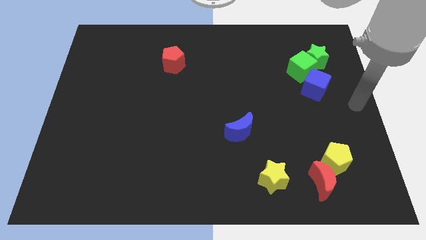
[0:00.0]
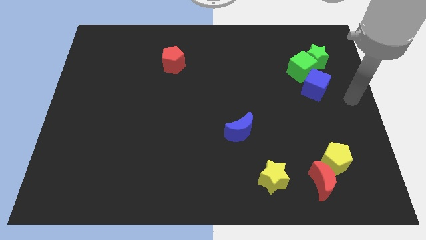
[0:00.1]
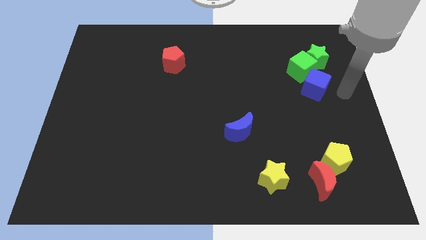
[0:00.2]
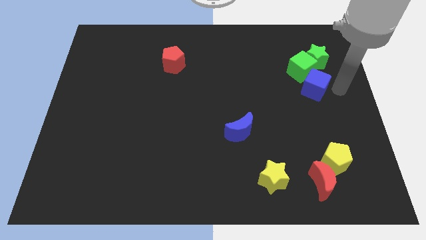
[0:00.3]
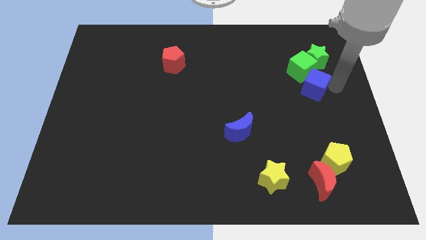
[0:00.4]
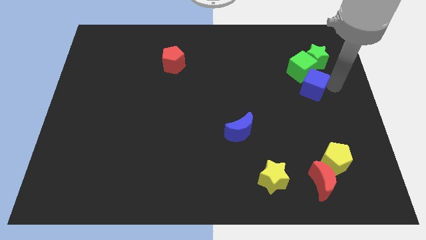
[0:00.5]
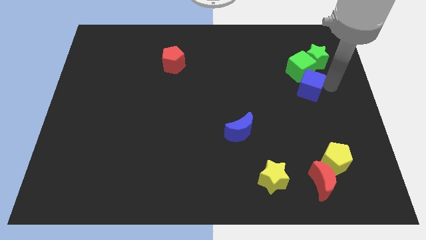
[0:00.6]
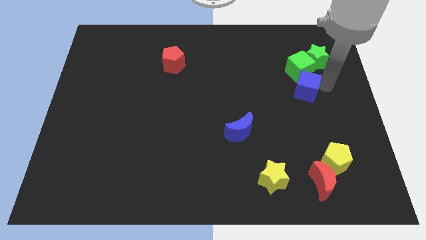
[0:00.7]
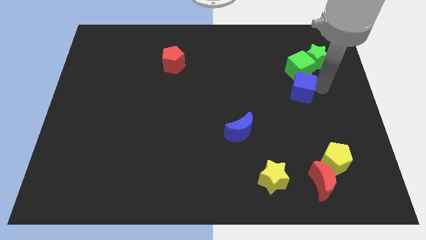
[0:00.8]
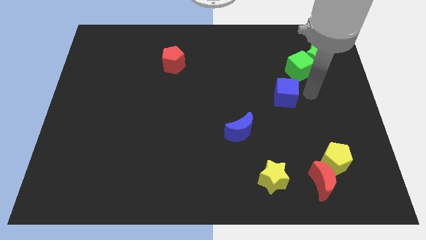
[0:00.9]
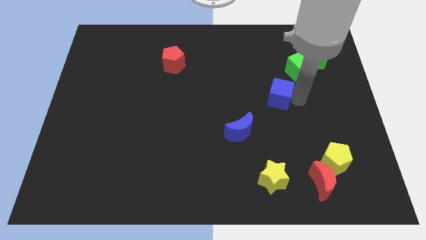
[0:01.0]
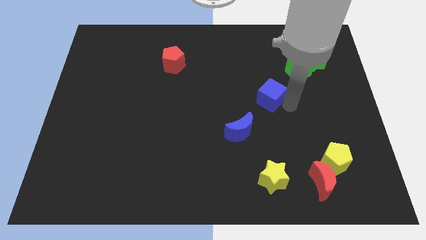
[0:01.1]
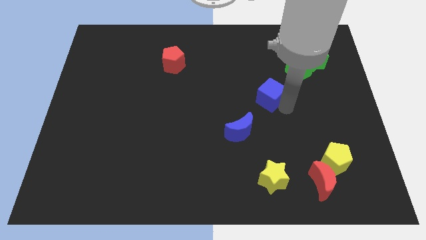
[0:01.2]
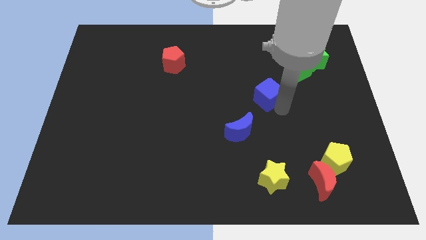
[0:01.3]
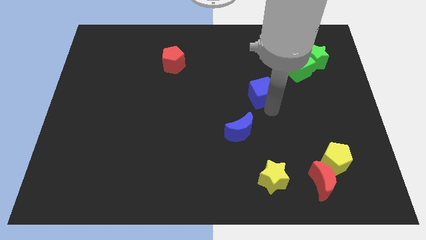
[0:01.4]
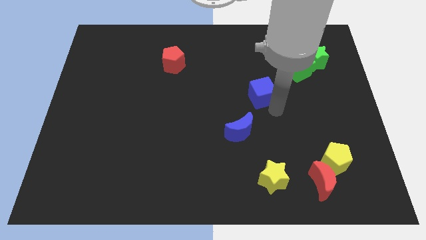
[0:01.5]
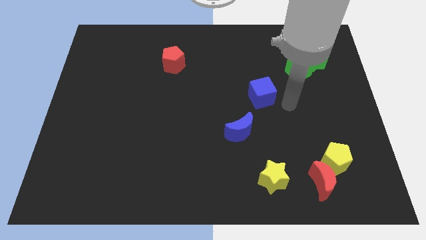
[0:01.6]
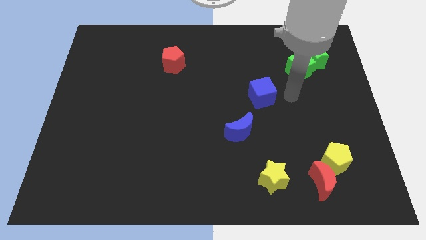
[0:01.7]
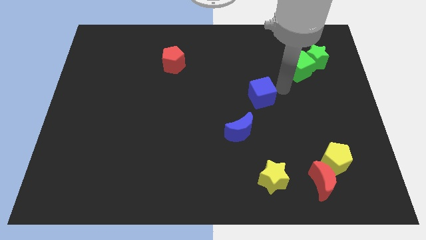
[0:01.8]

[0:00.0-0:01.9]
separate the blue cube from the green cube

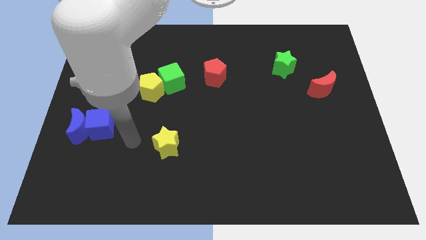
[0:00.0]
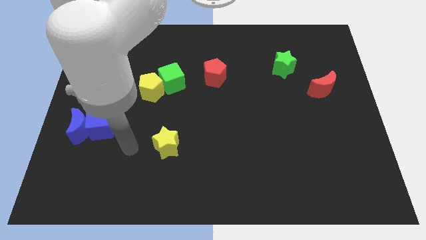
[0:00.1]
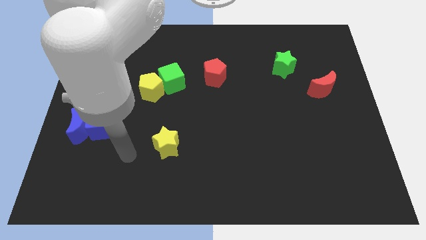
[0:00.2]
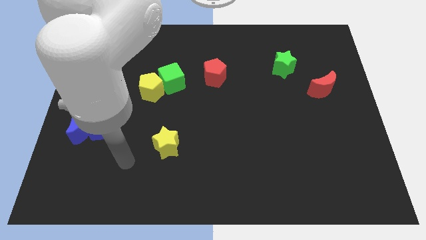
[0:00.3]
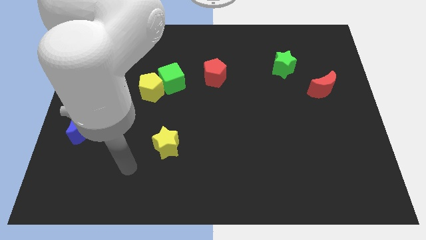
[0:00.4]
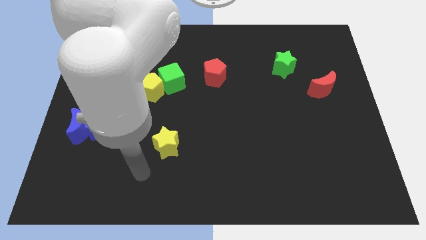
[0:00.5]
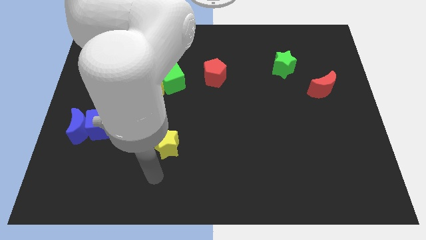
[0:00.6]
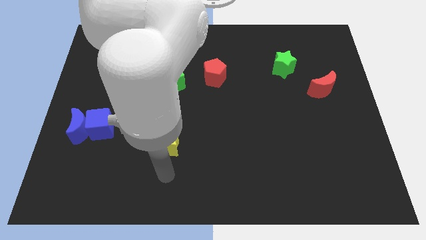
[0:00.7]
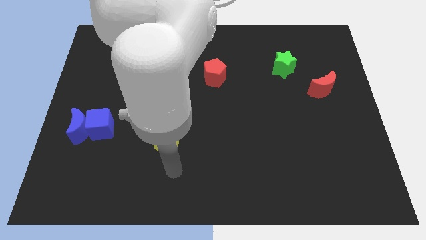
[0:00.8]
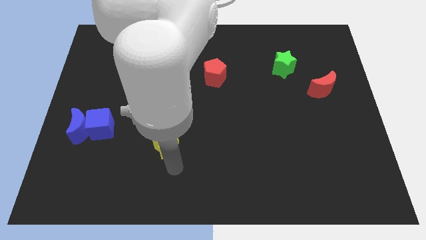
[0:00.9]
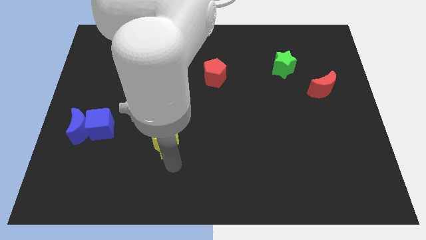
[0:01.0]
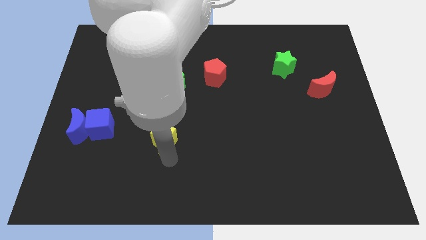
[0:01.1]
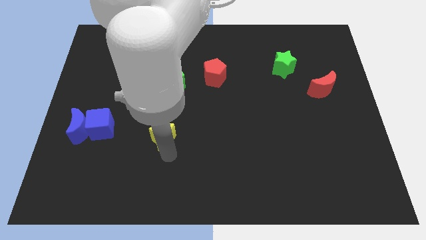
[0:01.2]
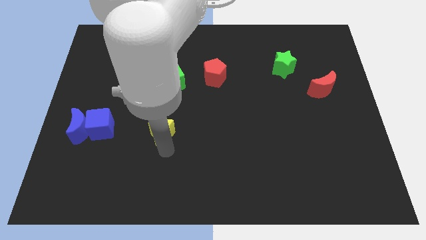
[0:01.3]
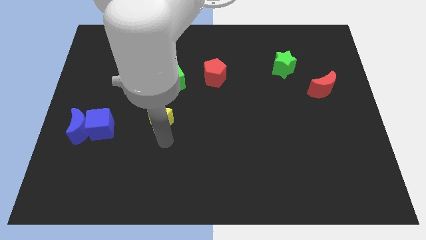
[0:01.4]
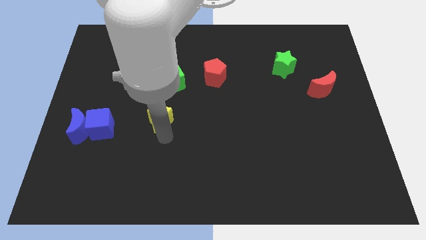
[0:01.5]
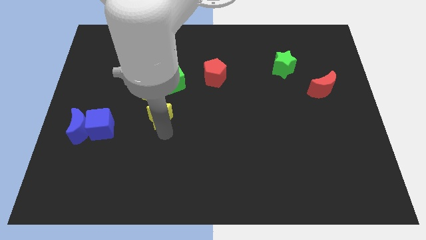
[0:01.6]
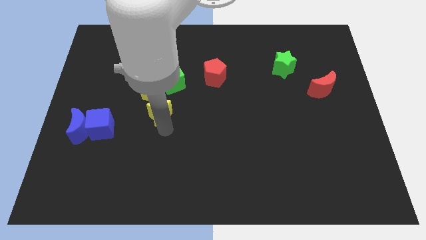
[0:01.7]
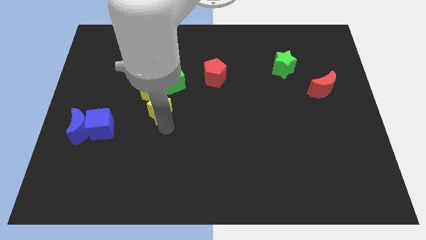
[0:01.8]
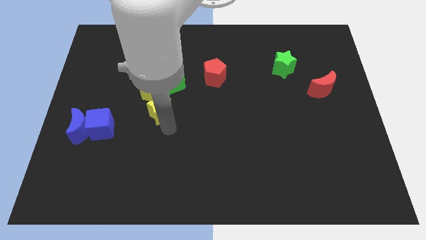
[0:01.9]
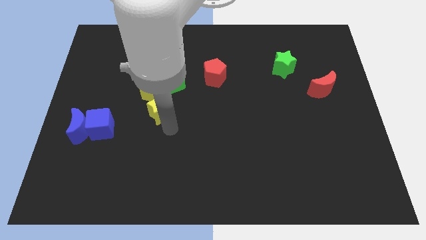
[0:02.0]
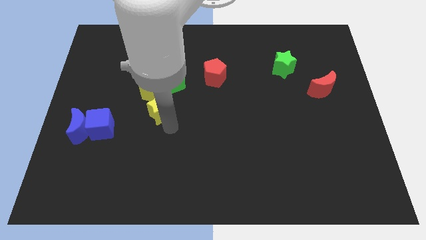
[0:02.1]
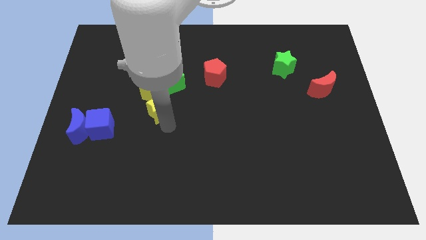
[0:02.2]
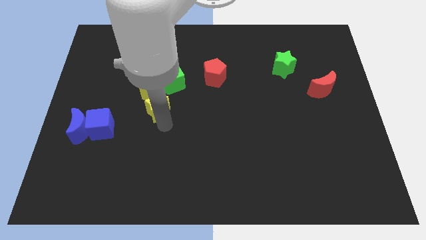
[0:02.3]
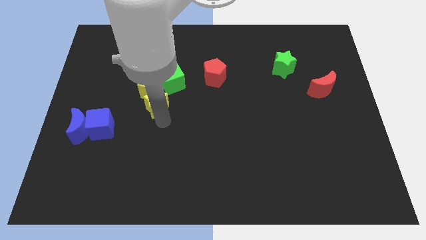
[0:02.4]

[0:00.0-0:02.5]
put the yellow star into yellow pentagon

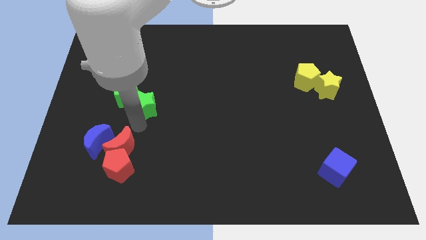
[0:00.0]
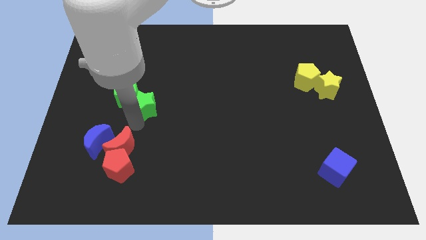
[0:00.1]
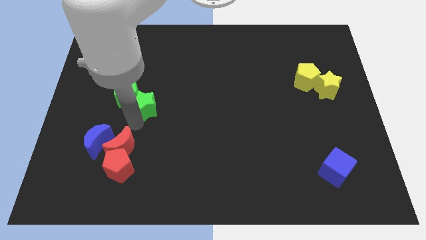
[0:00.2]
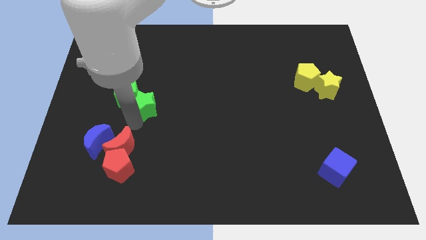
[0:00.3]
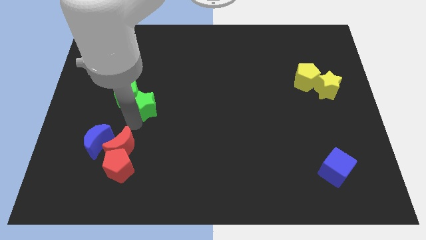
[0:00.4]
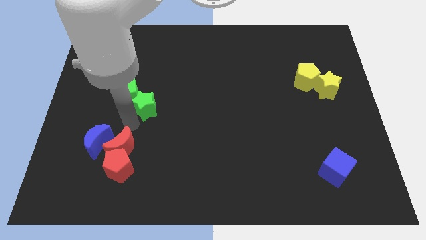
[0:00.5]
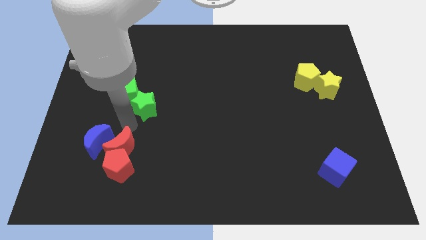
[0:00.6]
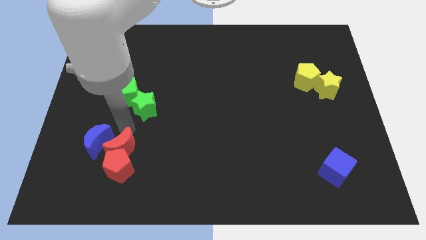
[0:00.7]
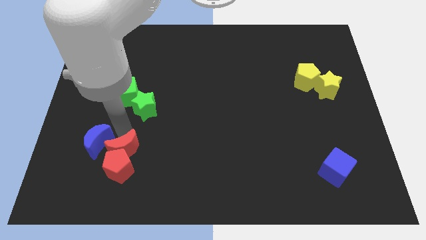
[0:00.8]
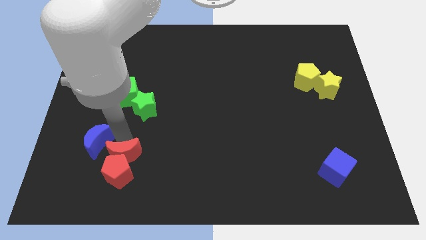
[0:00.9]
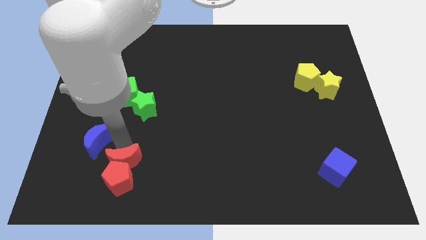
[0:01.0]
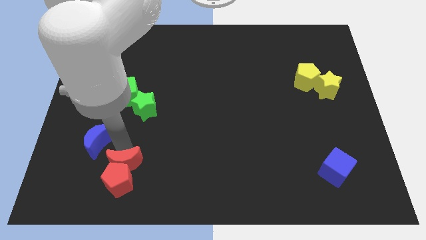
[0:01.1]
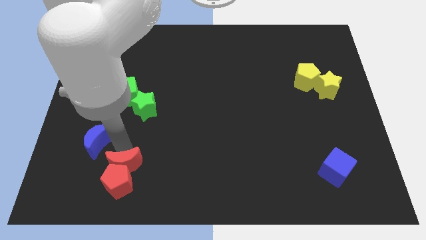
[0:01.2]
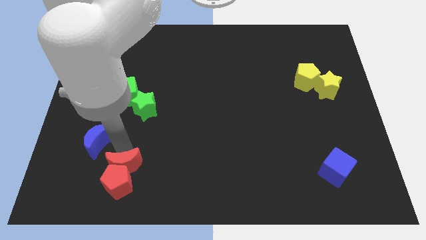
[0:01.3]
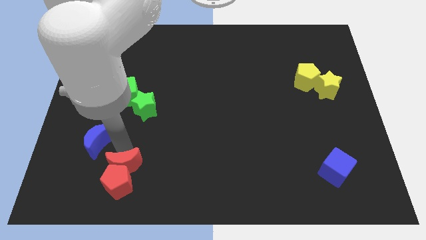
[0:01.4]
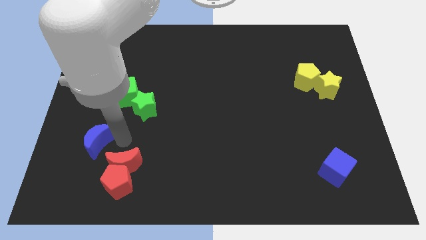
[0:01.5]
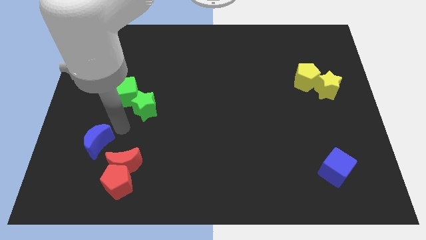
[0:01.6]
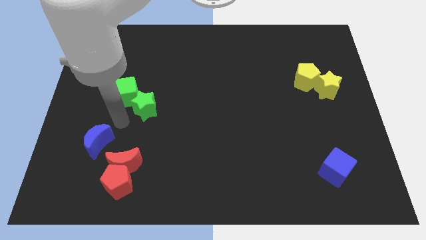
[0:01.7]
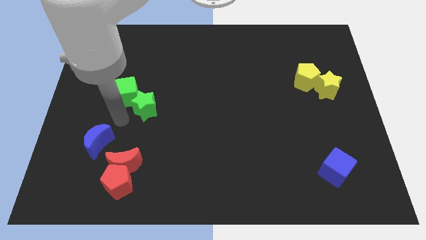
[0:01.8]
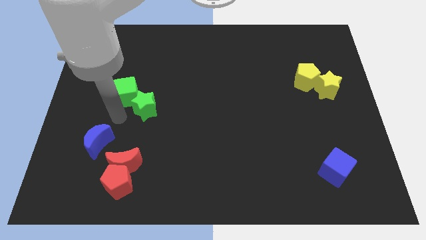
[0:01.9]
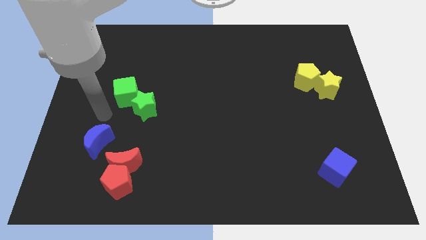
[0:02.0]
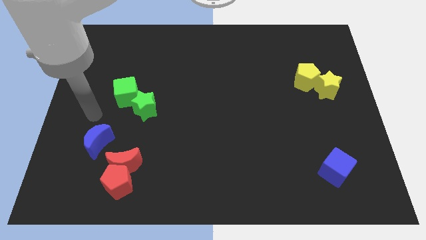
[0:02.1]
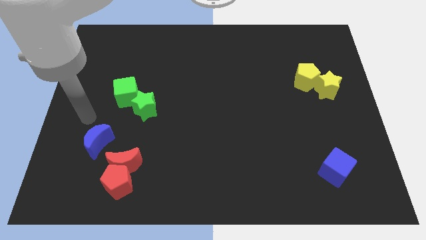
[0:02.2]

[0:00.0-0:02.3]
move the red crescent into the red pentagon

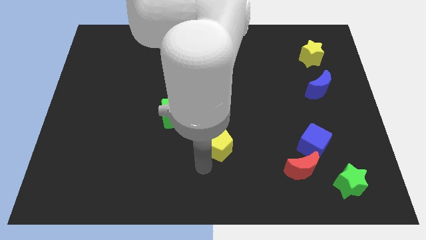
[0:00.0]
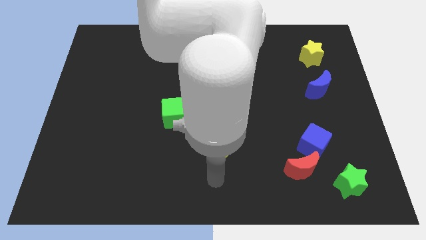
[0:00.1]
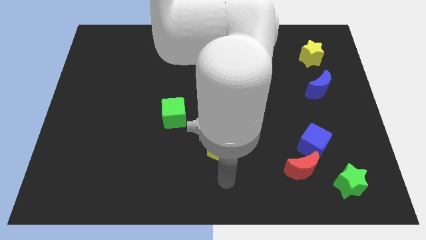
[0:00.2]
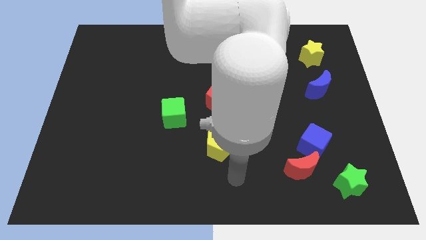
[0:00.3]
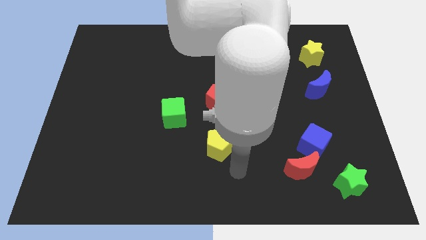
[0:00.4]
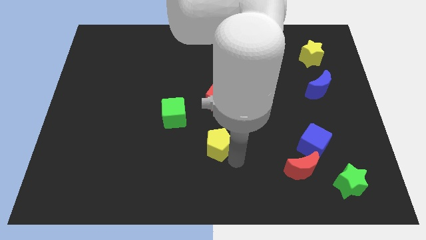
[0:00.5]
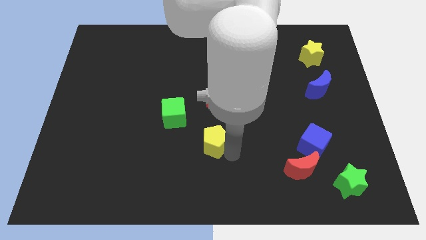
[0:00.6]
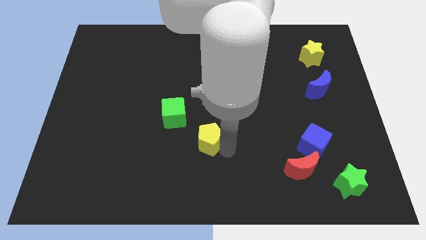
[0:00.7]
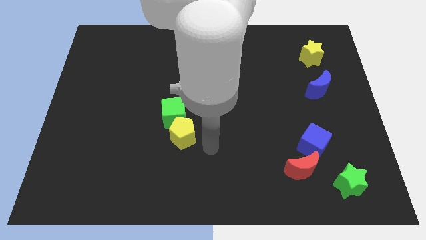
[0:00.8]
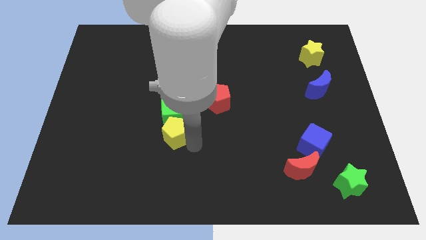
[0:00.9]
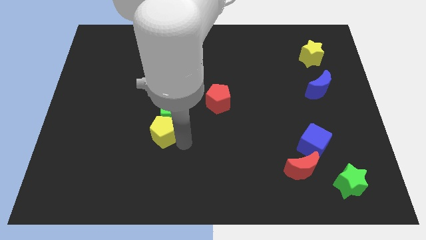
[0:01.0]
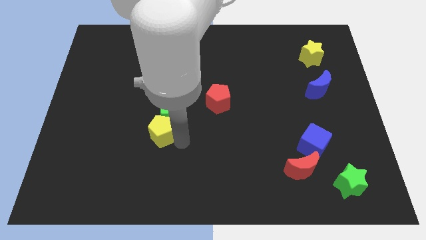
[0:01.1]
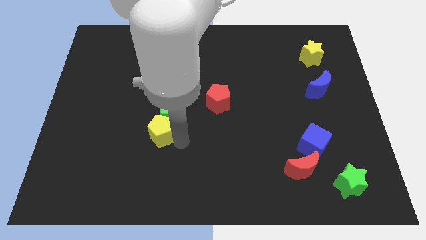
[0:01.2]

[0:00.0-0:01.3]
place the yellow pentagon below the green cube

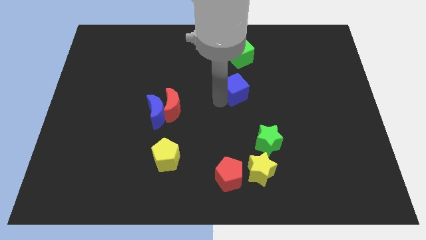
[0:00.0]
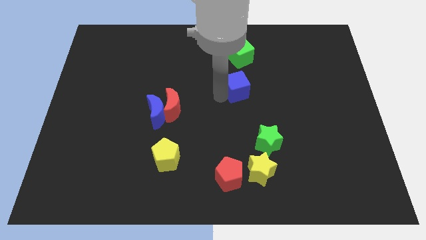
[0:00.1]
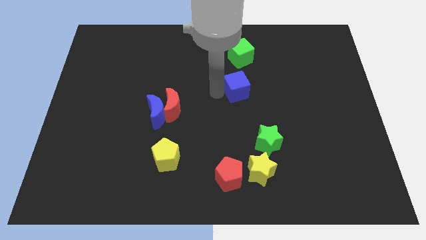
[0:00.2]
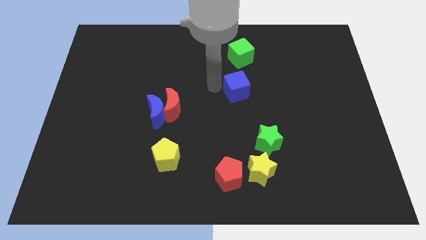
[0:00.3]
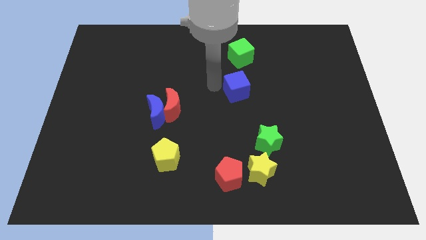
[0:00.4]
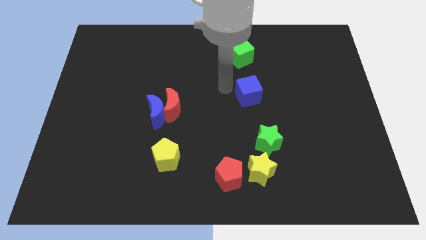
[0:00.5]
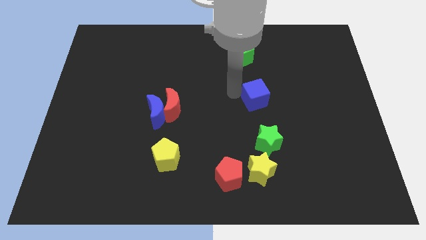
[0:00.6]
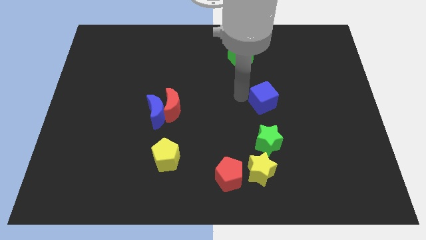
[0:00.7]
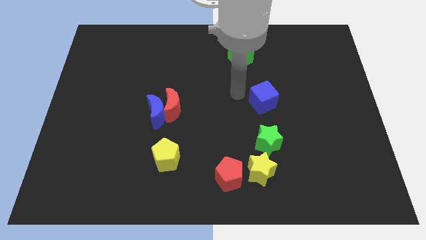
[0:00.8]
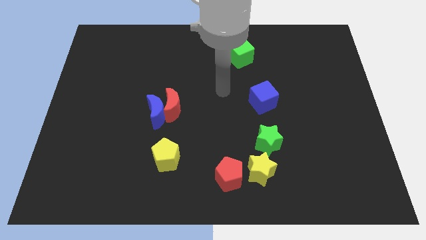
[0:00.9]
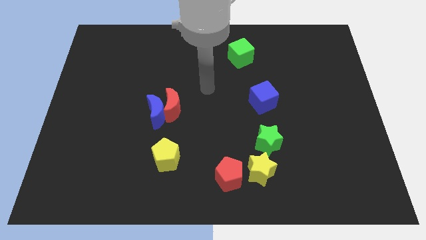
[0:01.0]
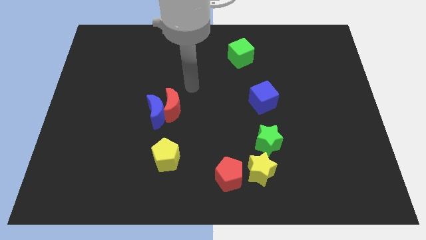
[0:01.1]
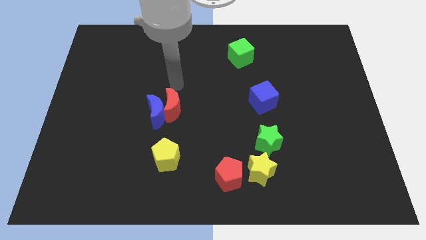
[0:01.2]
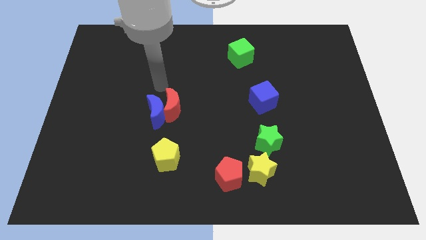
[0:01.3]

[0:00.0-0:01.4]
push the blue cube in between green cube and green star
